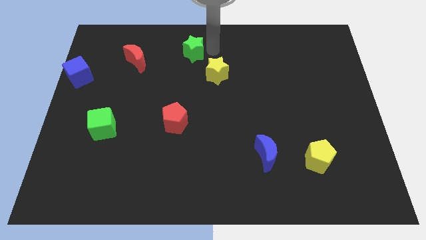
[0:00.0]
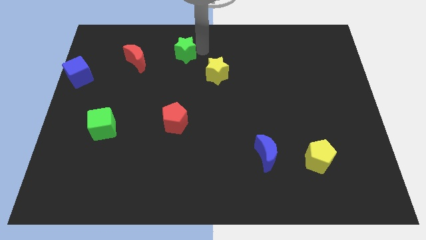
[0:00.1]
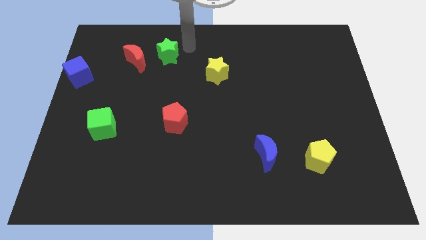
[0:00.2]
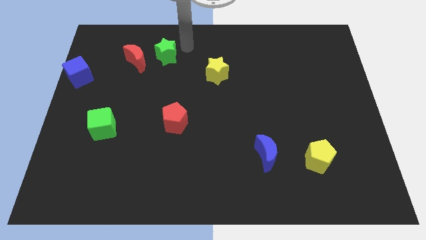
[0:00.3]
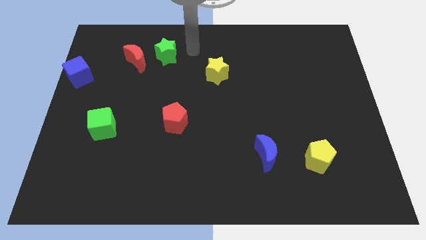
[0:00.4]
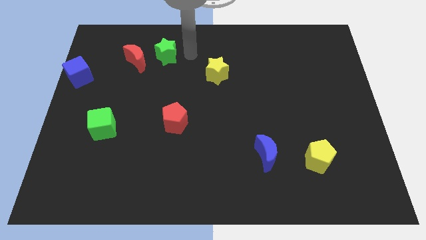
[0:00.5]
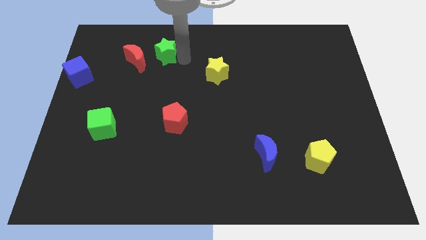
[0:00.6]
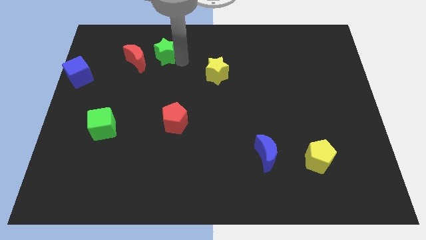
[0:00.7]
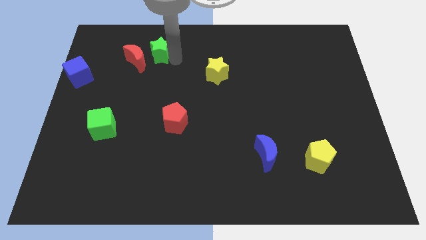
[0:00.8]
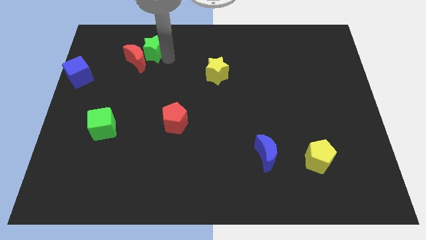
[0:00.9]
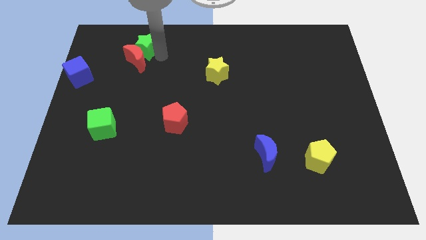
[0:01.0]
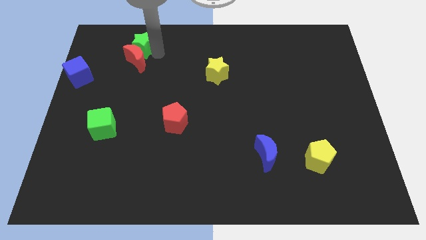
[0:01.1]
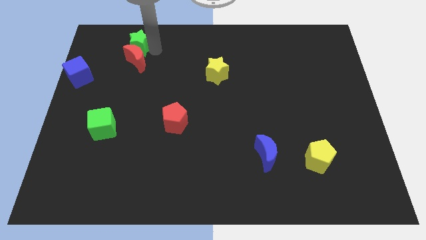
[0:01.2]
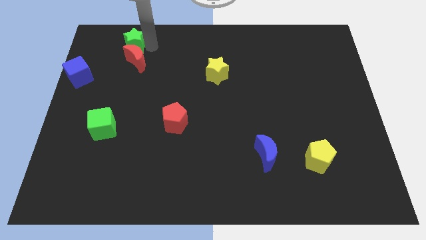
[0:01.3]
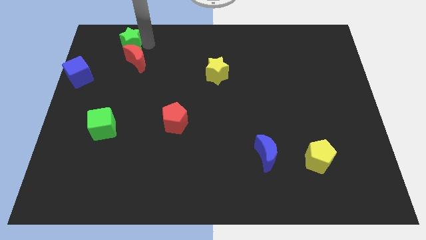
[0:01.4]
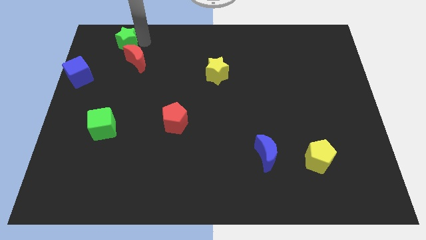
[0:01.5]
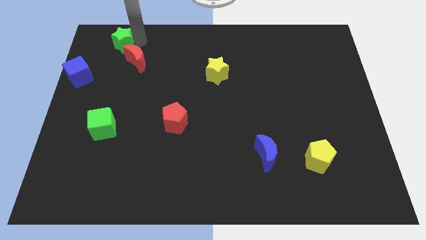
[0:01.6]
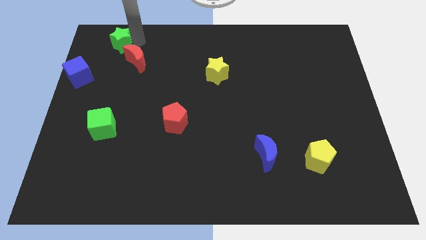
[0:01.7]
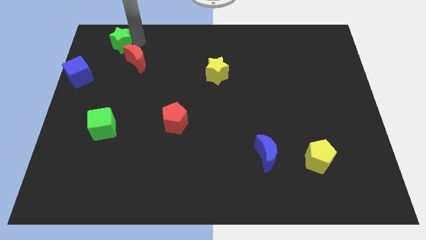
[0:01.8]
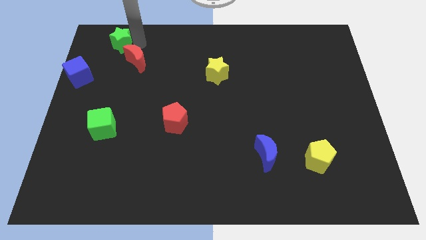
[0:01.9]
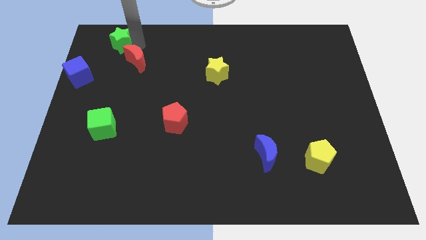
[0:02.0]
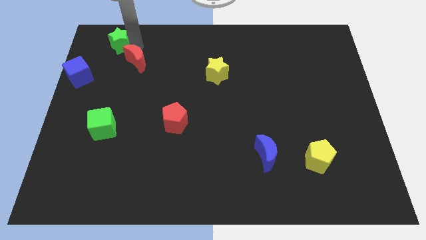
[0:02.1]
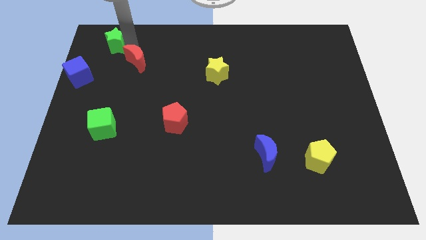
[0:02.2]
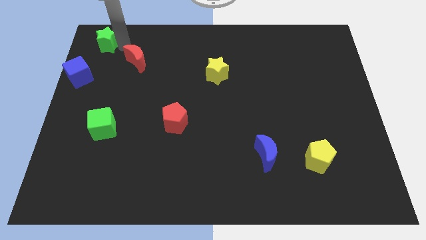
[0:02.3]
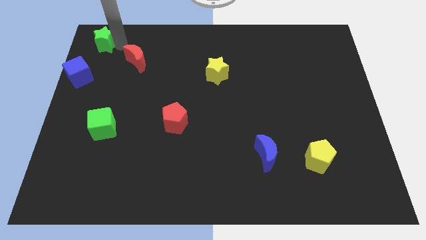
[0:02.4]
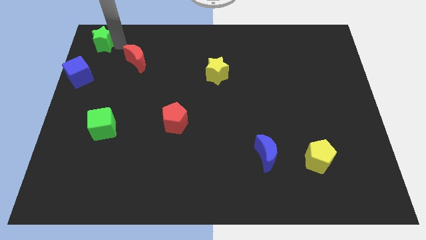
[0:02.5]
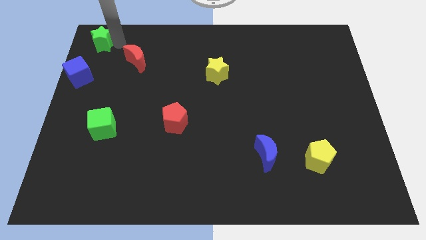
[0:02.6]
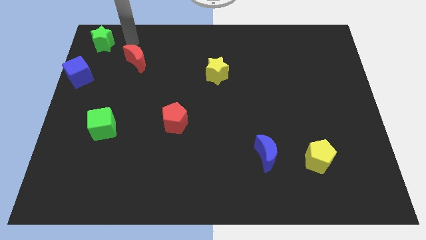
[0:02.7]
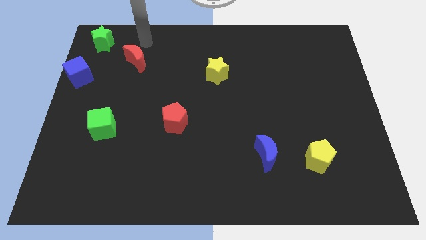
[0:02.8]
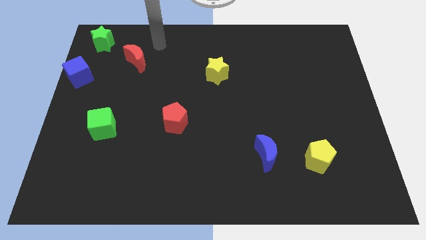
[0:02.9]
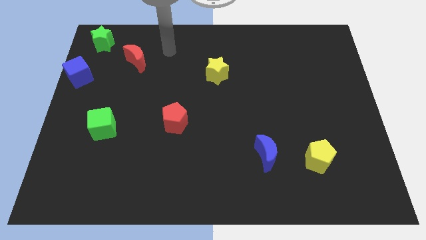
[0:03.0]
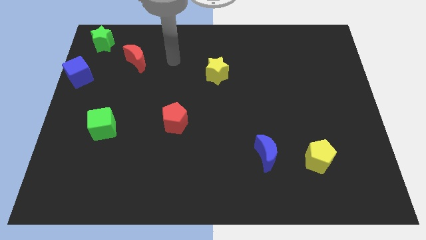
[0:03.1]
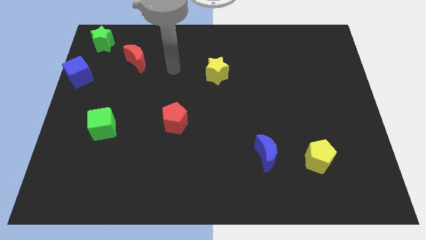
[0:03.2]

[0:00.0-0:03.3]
push the green star to the top left corner of the board

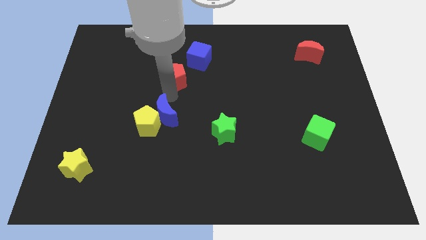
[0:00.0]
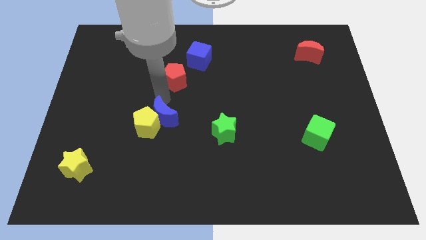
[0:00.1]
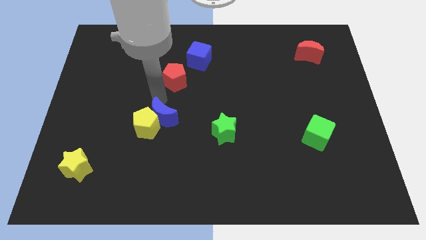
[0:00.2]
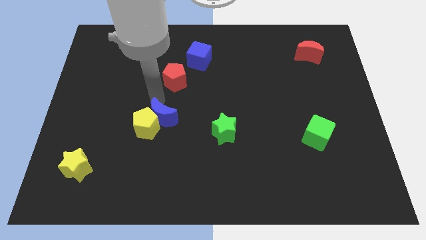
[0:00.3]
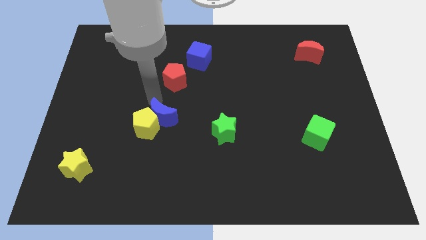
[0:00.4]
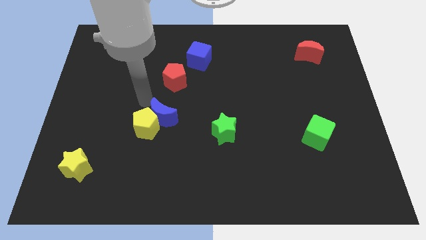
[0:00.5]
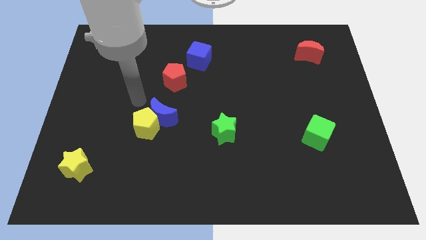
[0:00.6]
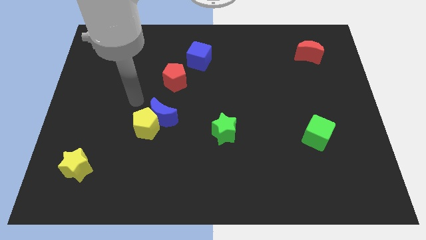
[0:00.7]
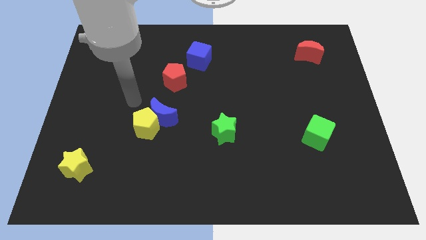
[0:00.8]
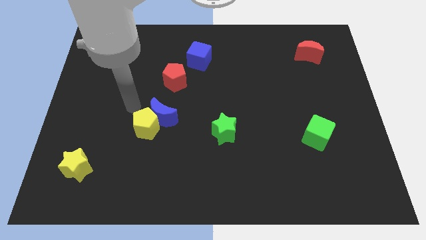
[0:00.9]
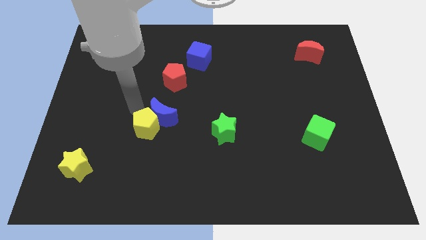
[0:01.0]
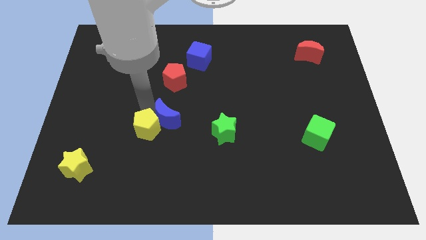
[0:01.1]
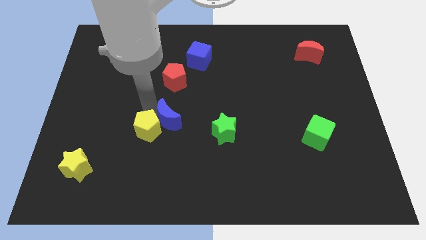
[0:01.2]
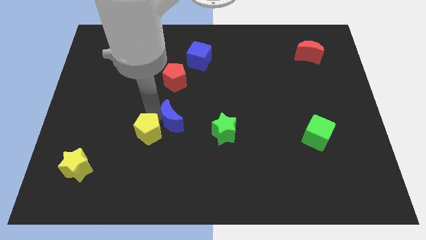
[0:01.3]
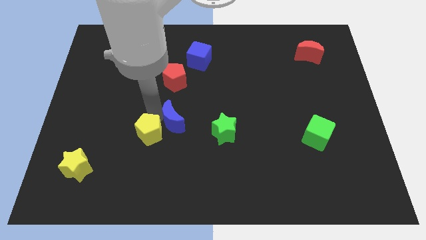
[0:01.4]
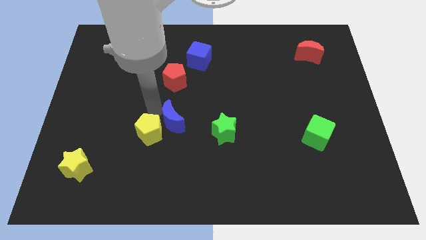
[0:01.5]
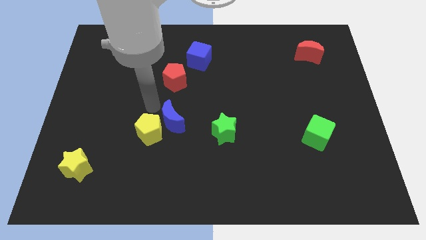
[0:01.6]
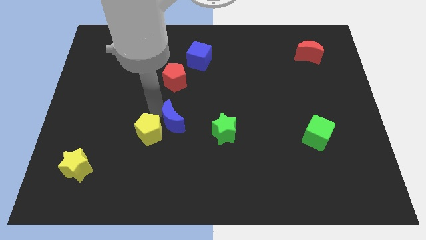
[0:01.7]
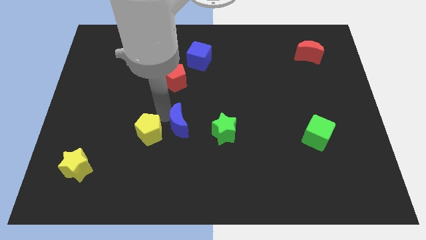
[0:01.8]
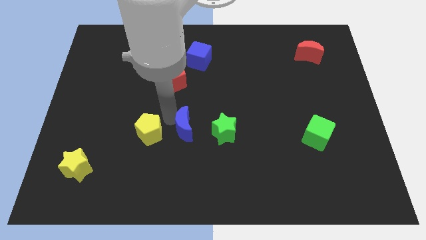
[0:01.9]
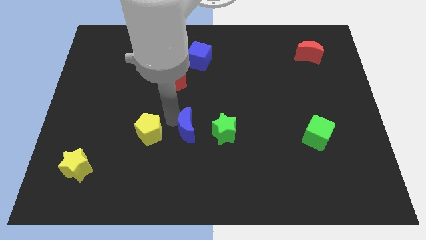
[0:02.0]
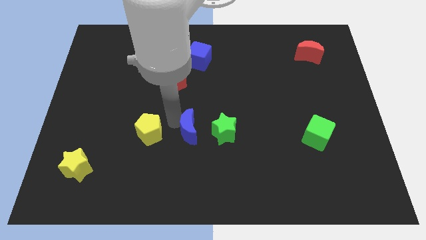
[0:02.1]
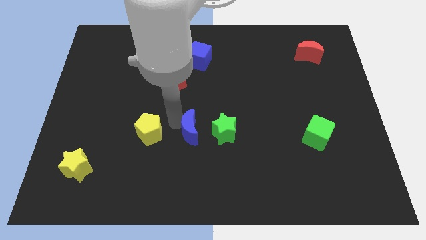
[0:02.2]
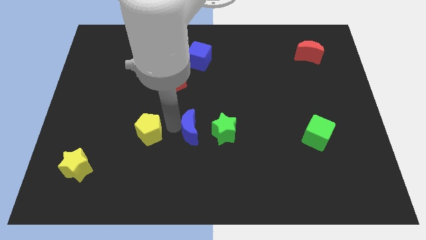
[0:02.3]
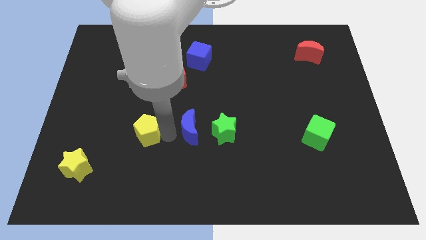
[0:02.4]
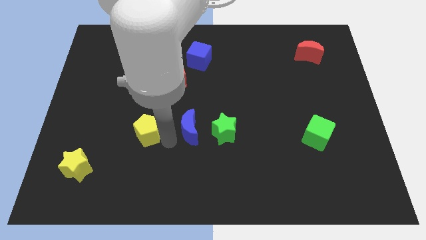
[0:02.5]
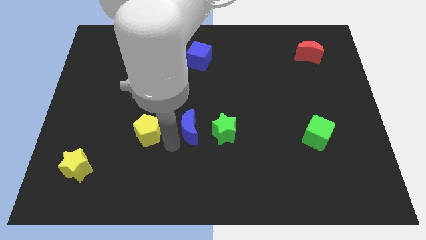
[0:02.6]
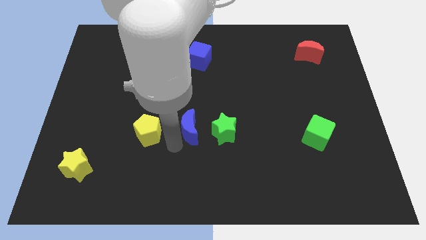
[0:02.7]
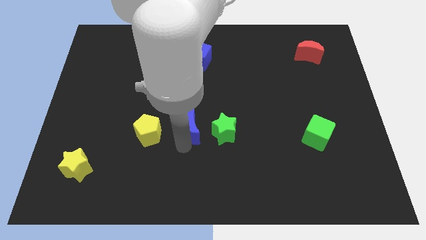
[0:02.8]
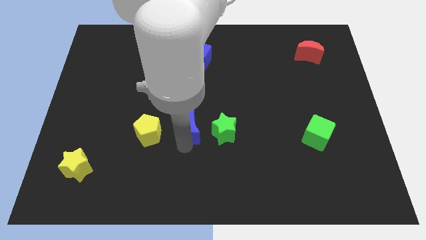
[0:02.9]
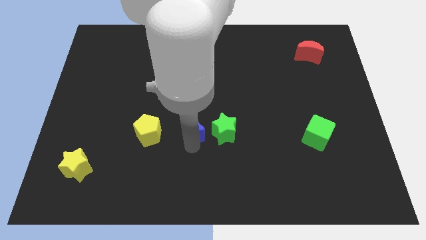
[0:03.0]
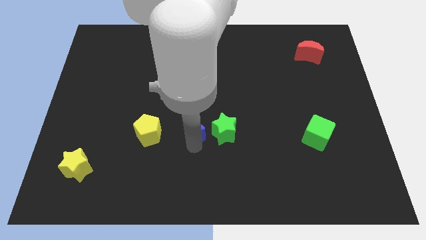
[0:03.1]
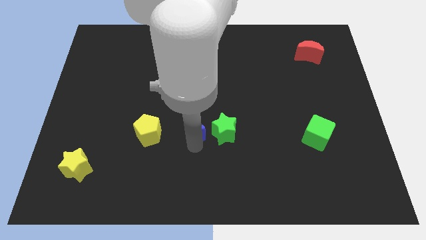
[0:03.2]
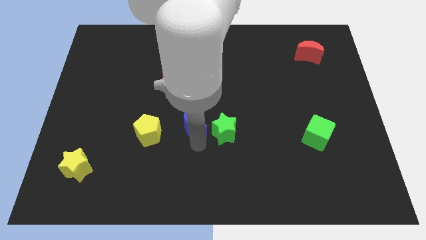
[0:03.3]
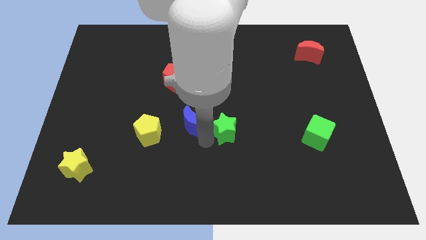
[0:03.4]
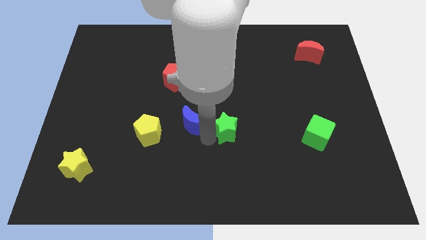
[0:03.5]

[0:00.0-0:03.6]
move the blue crescent to the top left side of the green star

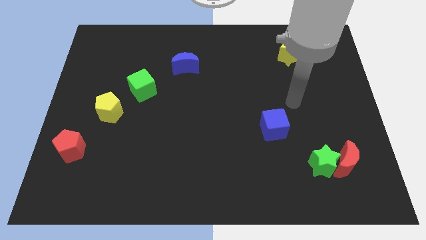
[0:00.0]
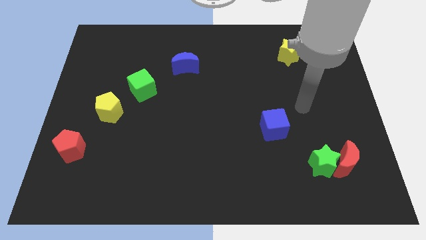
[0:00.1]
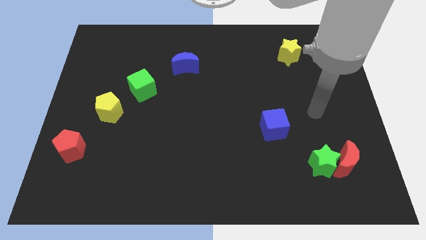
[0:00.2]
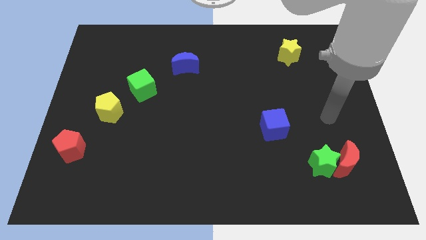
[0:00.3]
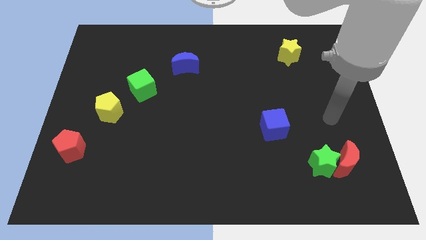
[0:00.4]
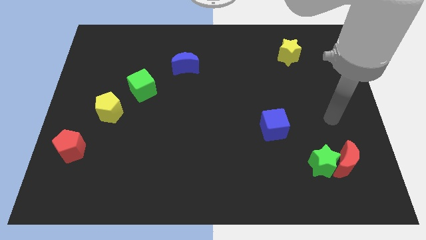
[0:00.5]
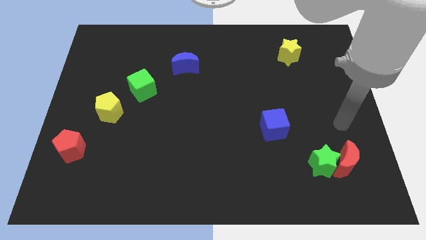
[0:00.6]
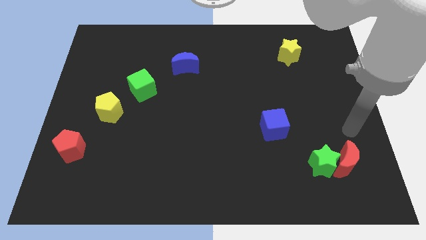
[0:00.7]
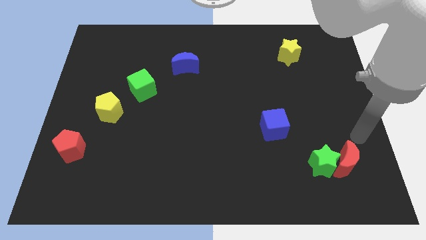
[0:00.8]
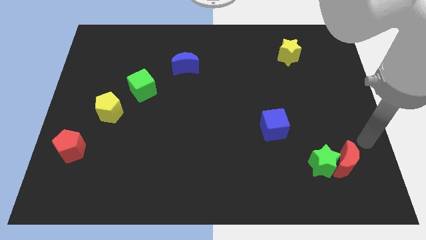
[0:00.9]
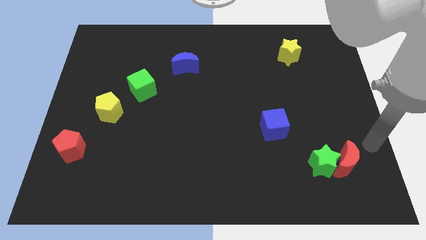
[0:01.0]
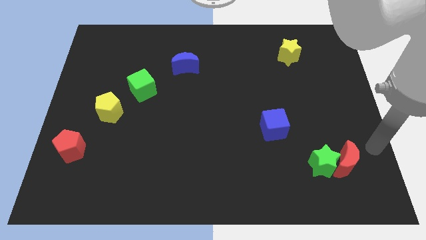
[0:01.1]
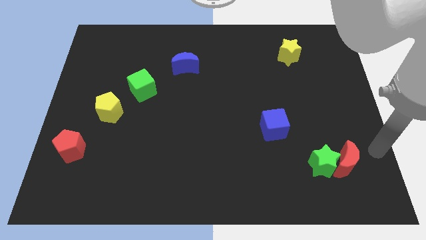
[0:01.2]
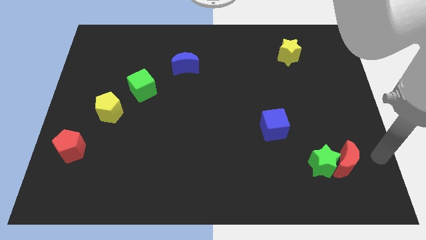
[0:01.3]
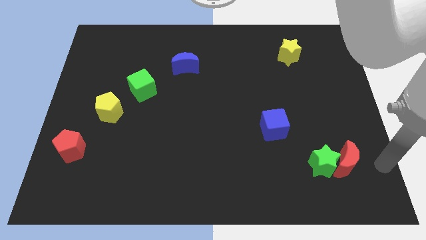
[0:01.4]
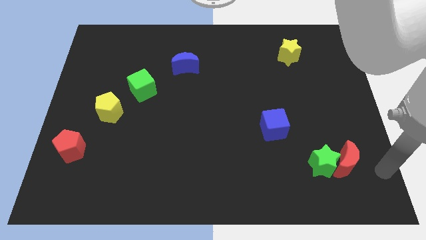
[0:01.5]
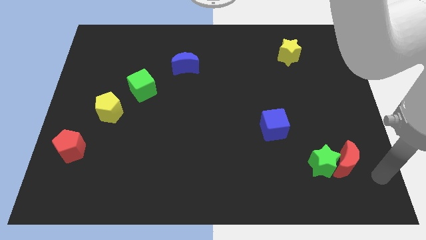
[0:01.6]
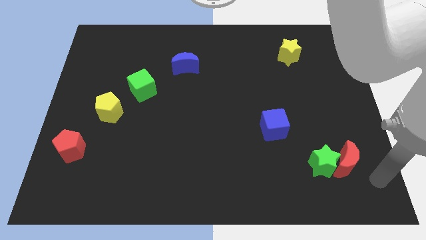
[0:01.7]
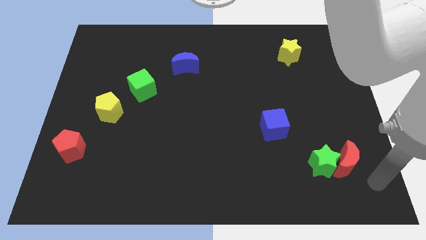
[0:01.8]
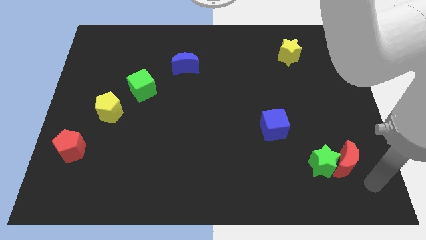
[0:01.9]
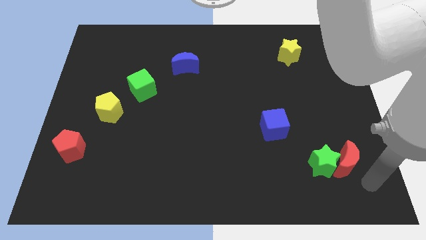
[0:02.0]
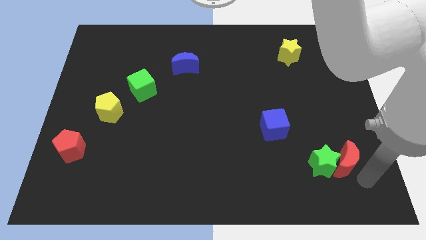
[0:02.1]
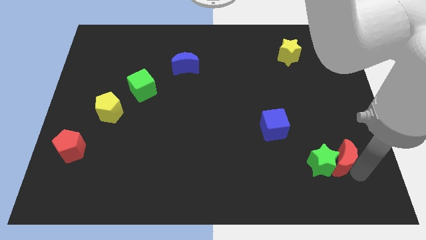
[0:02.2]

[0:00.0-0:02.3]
go near the red moon
